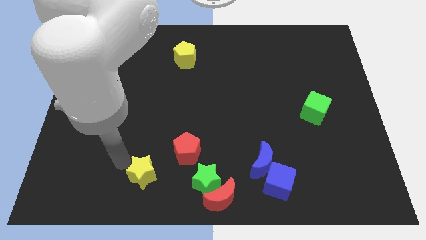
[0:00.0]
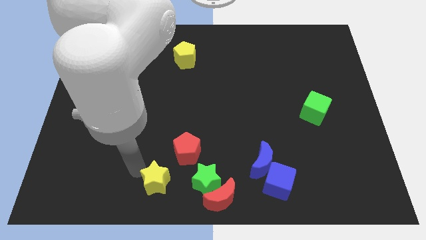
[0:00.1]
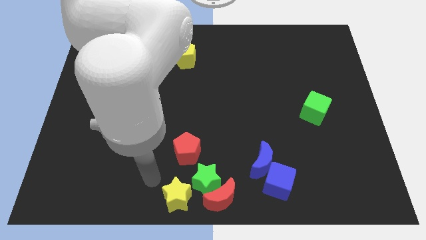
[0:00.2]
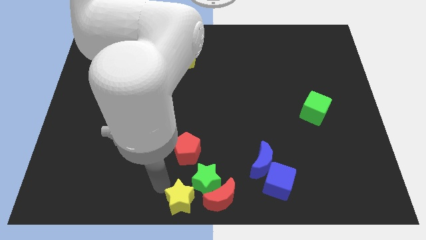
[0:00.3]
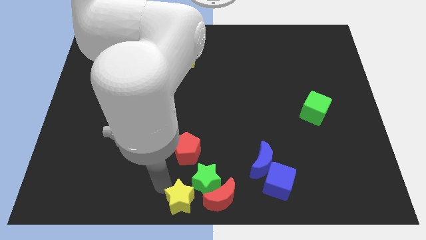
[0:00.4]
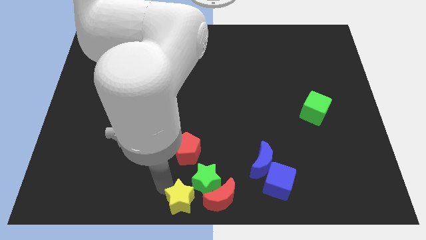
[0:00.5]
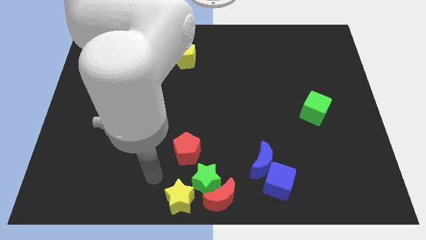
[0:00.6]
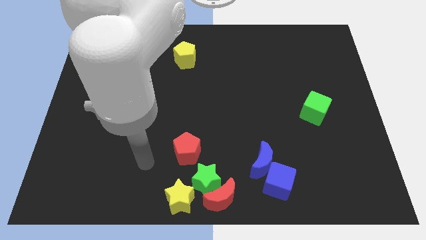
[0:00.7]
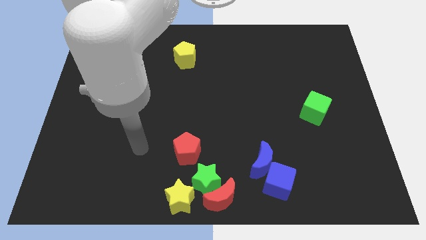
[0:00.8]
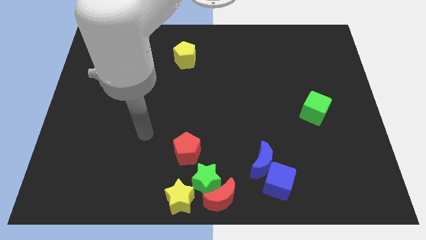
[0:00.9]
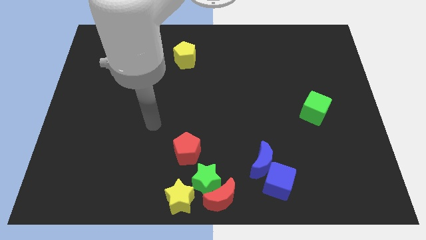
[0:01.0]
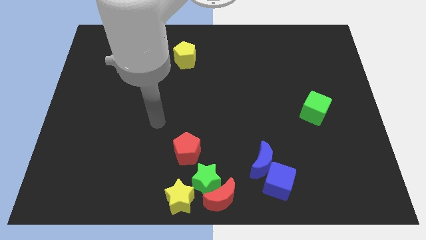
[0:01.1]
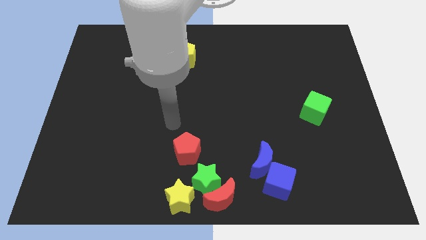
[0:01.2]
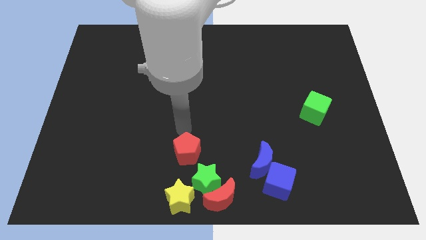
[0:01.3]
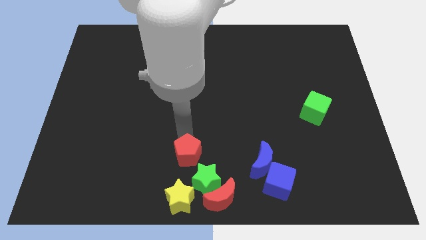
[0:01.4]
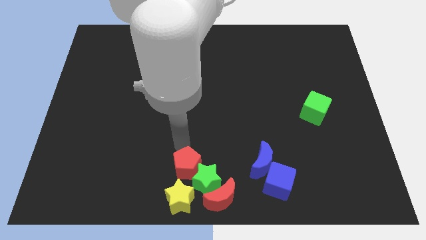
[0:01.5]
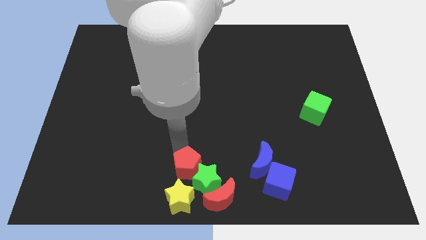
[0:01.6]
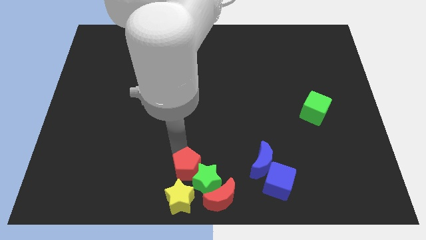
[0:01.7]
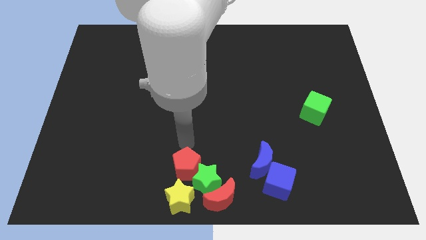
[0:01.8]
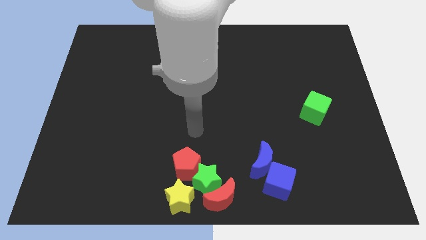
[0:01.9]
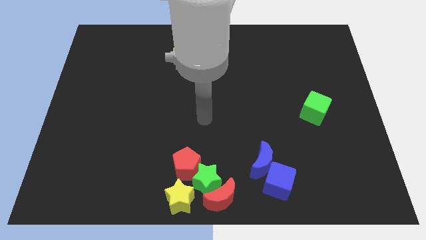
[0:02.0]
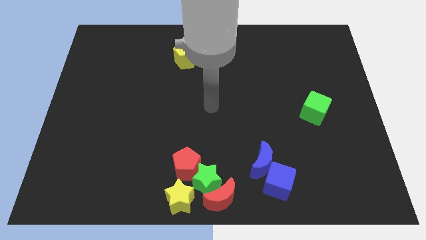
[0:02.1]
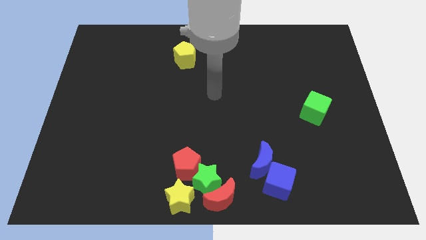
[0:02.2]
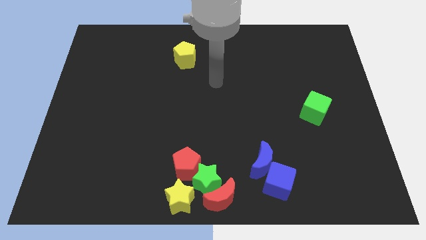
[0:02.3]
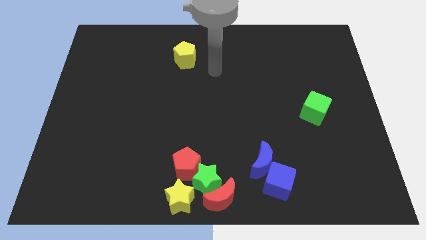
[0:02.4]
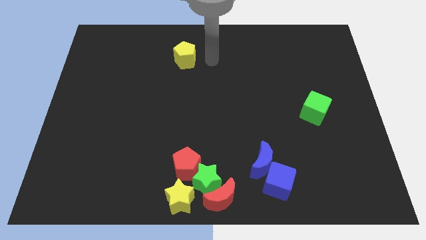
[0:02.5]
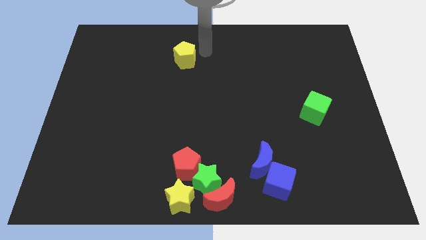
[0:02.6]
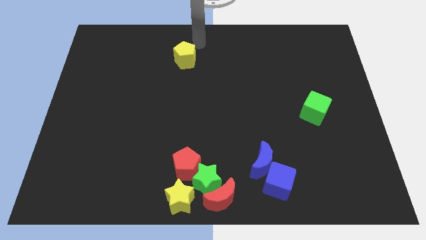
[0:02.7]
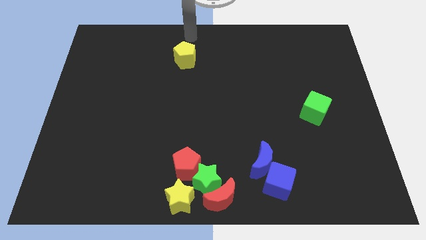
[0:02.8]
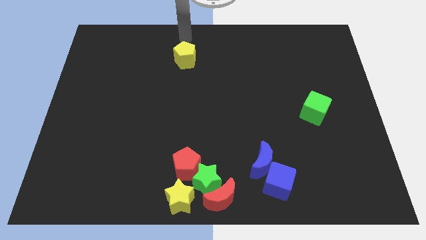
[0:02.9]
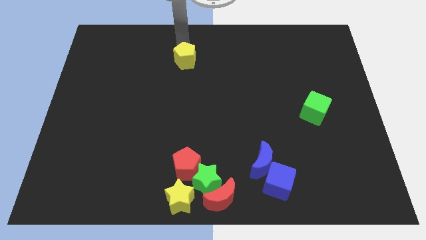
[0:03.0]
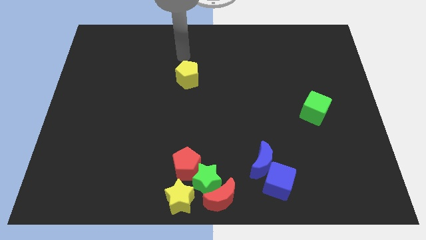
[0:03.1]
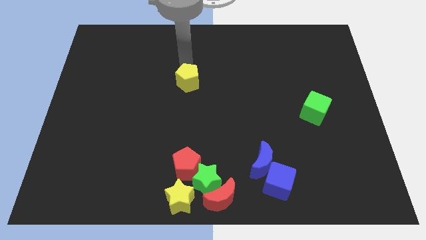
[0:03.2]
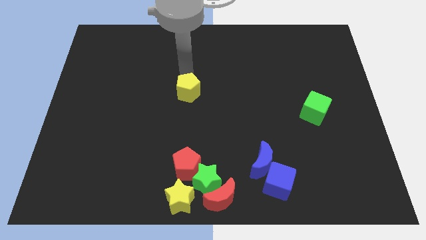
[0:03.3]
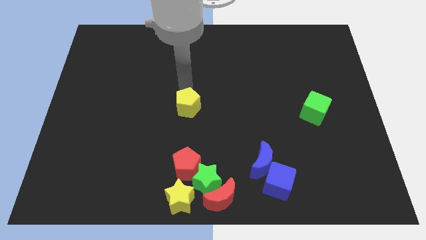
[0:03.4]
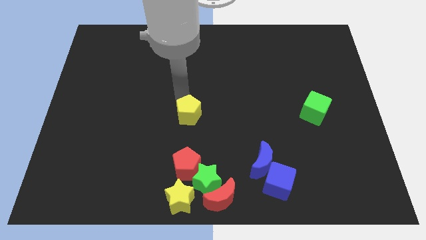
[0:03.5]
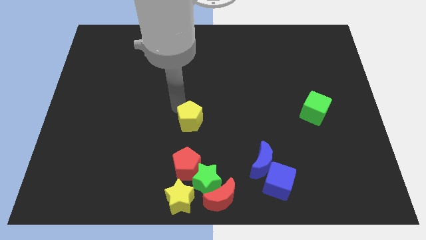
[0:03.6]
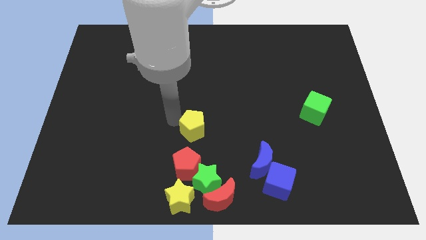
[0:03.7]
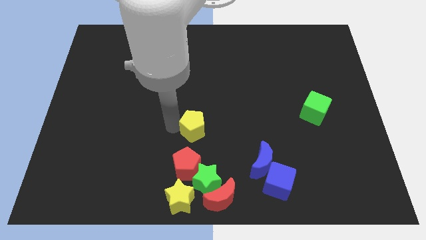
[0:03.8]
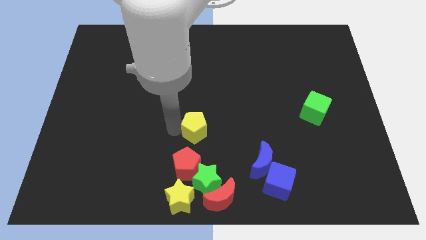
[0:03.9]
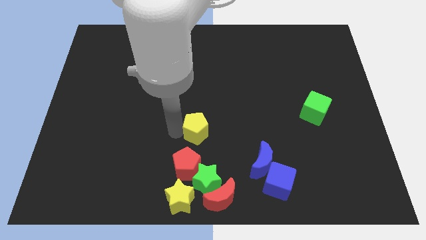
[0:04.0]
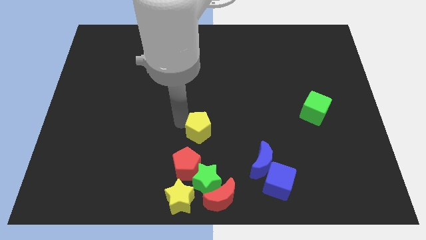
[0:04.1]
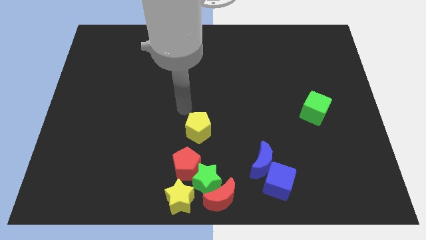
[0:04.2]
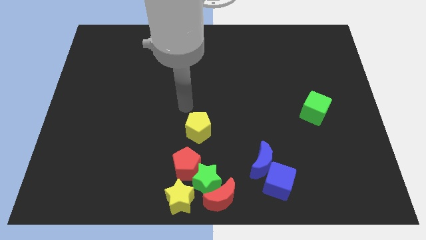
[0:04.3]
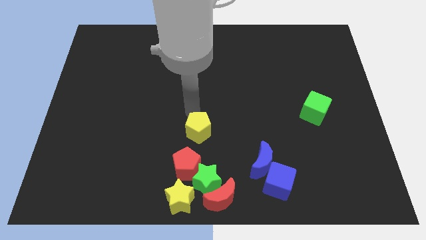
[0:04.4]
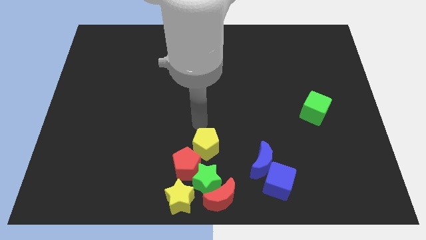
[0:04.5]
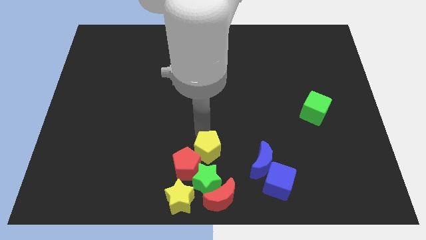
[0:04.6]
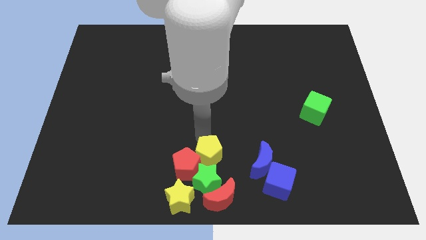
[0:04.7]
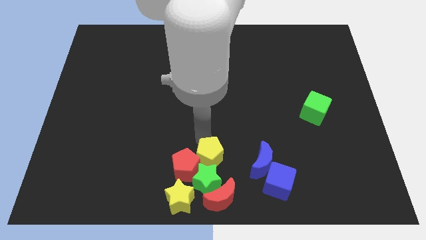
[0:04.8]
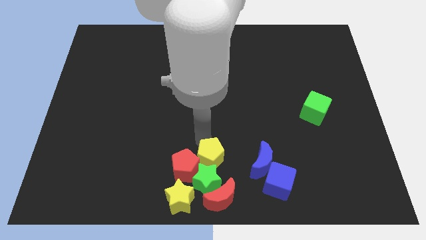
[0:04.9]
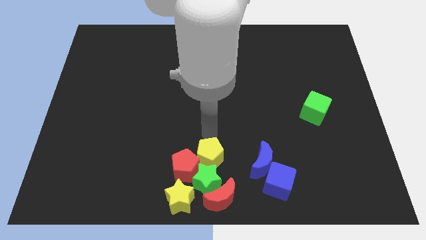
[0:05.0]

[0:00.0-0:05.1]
push the yellow star into the green star

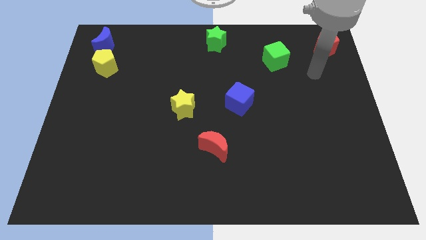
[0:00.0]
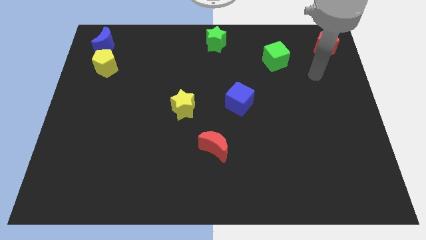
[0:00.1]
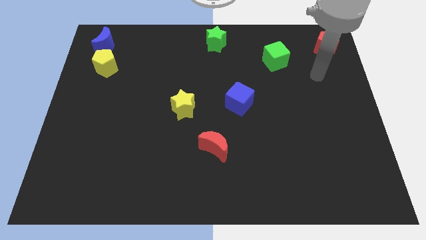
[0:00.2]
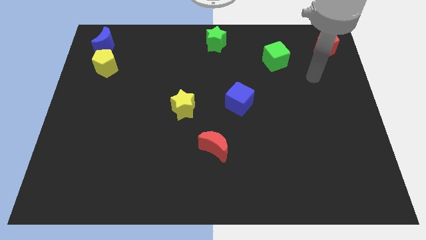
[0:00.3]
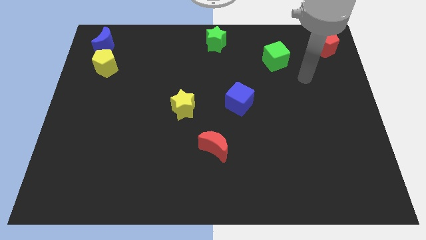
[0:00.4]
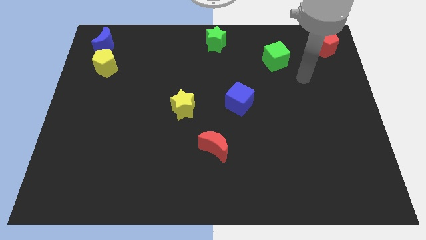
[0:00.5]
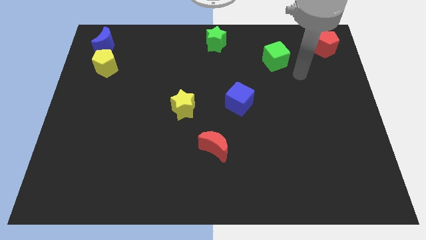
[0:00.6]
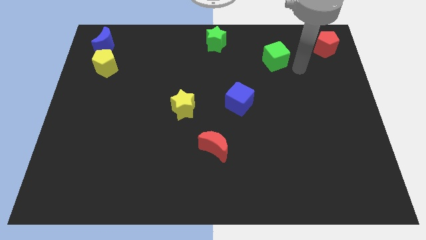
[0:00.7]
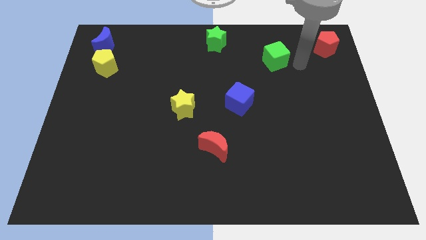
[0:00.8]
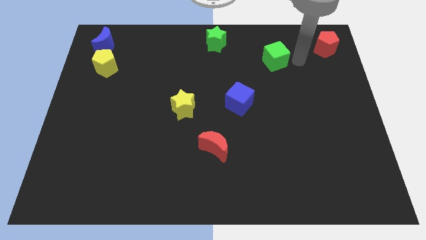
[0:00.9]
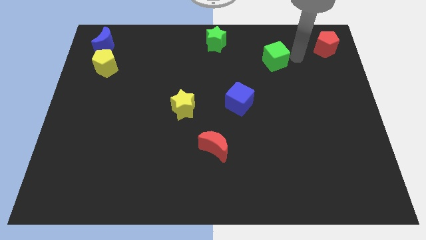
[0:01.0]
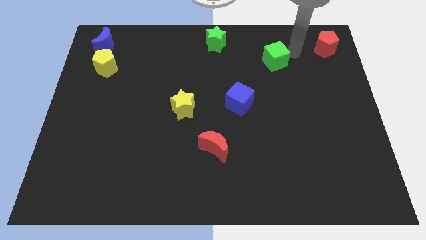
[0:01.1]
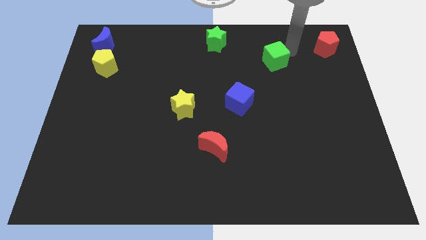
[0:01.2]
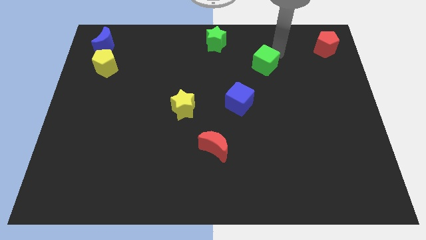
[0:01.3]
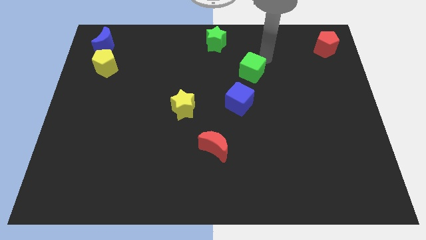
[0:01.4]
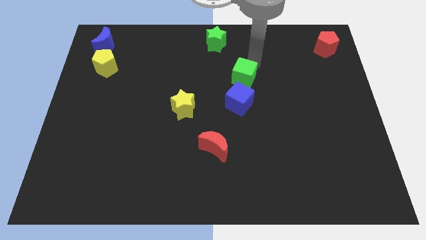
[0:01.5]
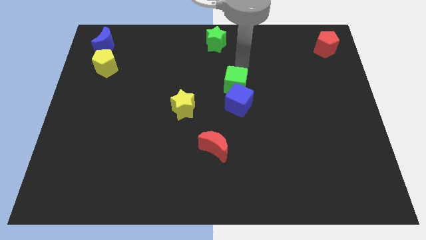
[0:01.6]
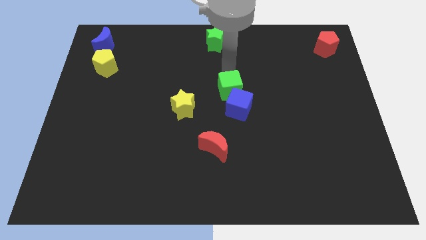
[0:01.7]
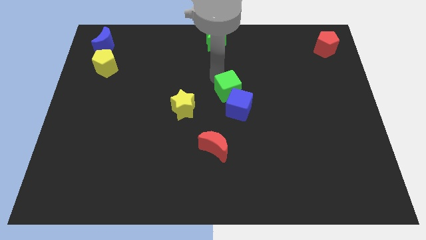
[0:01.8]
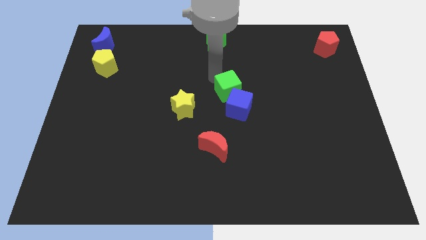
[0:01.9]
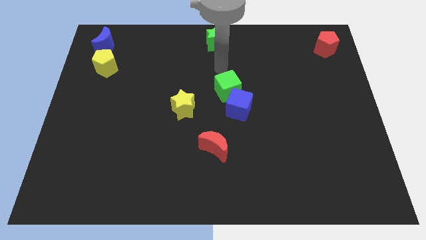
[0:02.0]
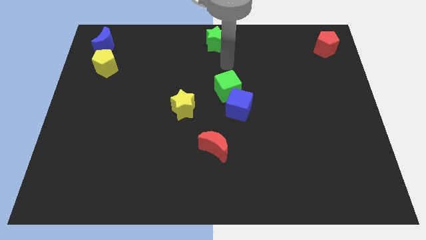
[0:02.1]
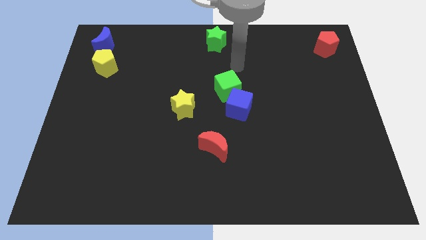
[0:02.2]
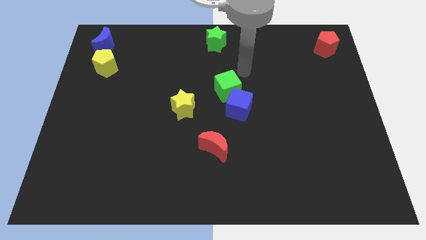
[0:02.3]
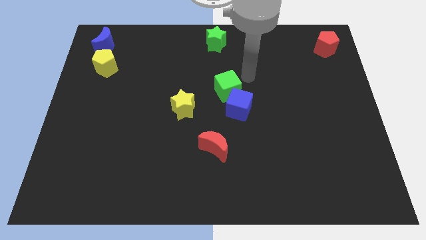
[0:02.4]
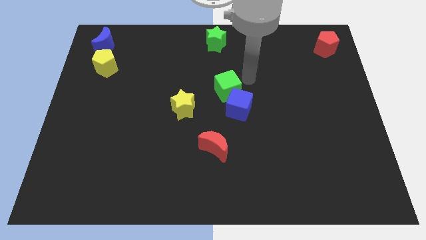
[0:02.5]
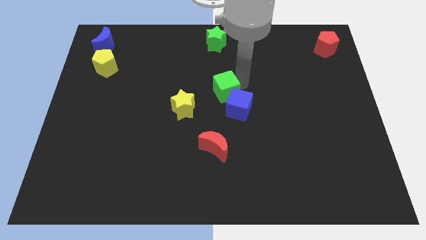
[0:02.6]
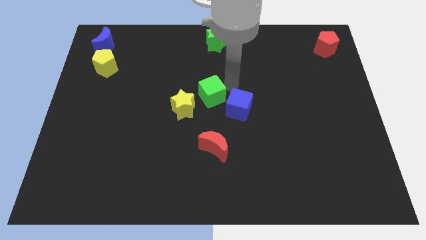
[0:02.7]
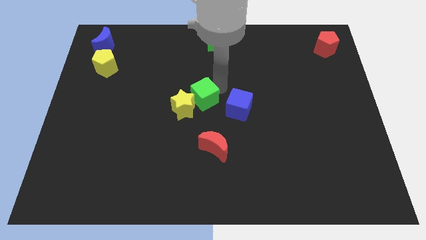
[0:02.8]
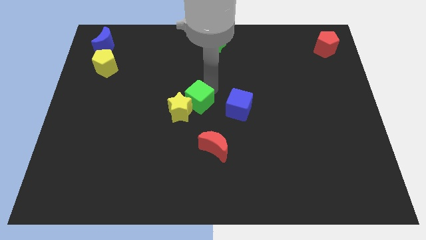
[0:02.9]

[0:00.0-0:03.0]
place green cube above the blue cube

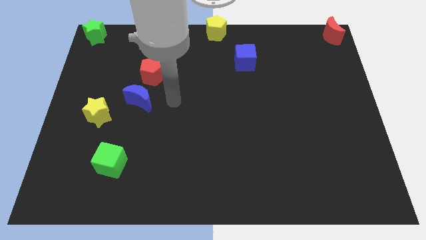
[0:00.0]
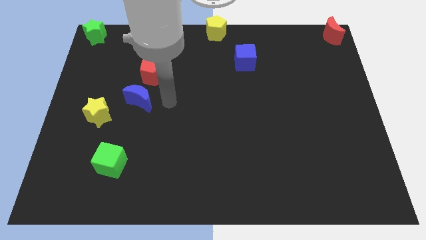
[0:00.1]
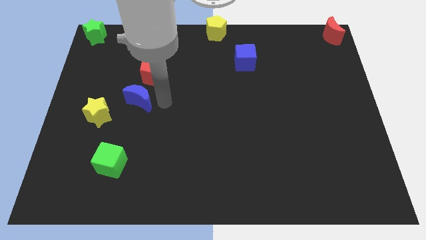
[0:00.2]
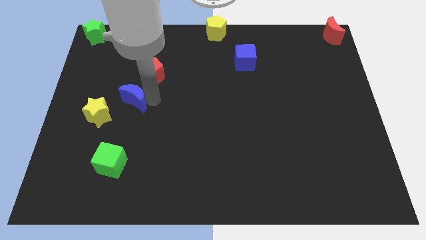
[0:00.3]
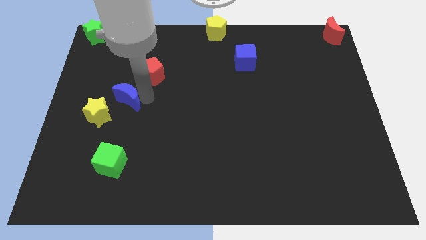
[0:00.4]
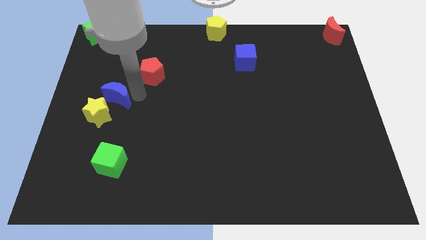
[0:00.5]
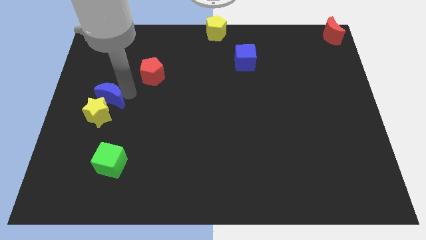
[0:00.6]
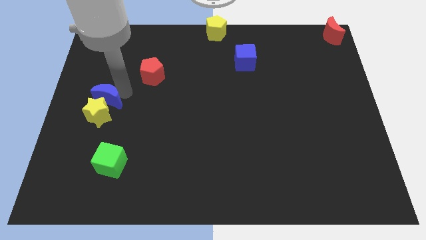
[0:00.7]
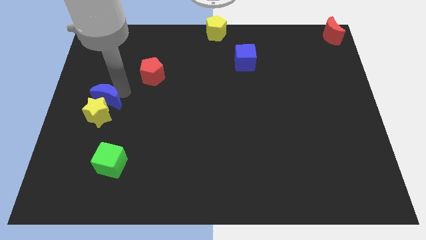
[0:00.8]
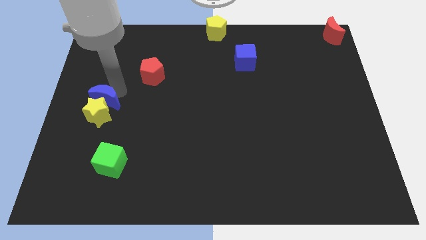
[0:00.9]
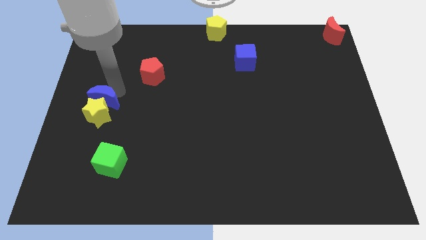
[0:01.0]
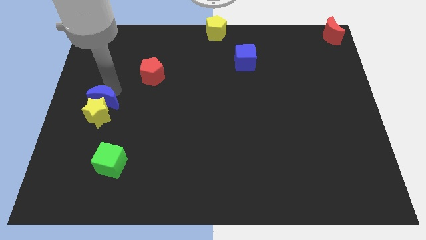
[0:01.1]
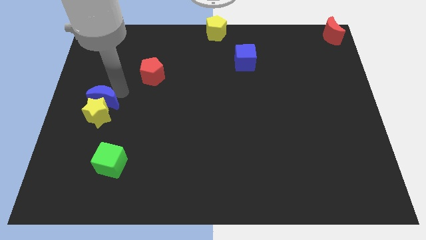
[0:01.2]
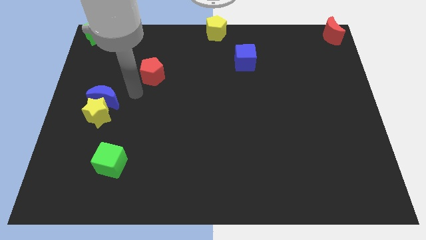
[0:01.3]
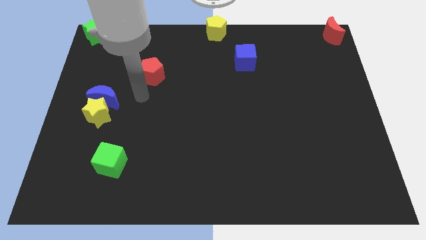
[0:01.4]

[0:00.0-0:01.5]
move the blue crescent towards the yellow pentagon
